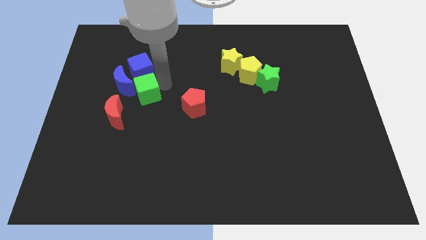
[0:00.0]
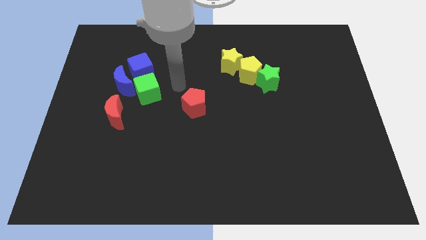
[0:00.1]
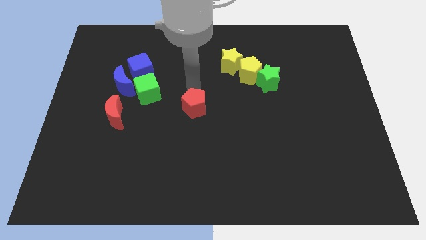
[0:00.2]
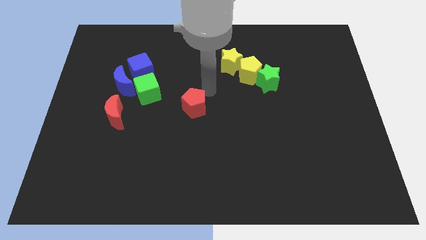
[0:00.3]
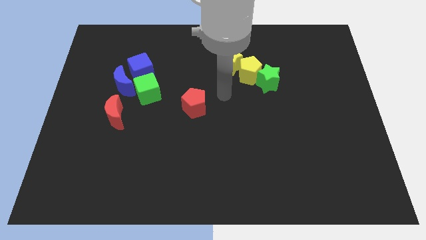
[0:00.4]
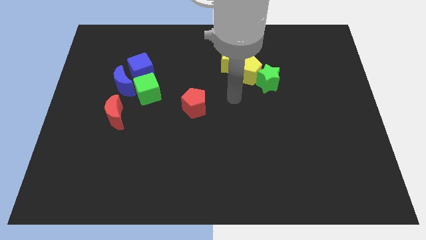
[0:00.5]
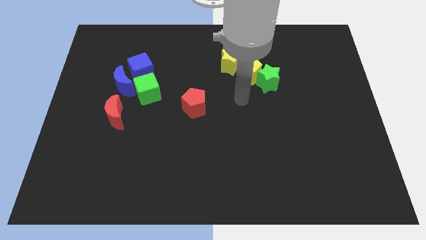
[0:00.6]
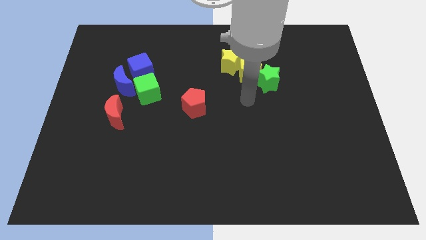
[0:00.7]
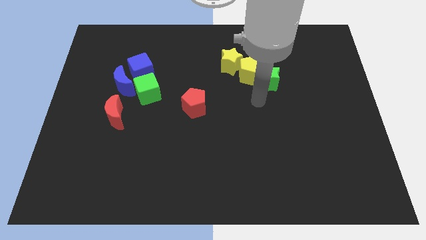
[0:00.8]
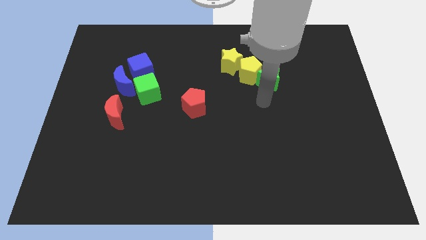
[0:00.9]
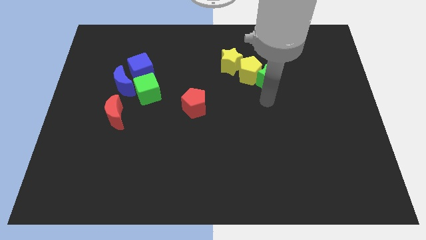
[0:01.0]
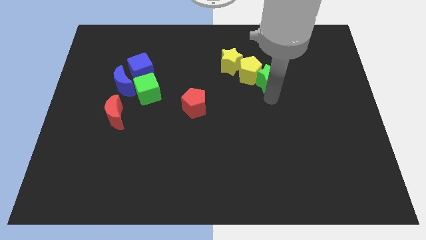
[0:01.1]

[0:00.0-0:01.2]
move your arm away from green cube

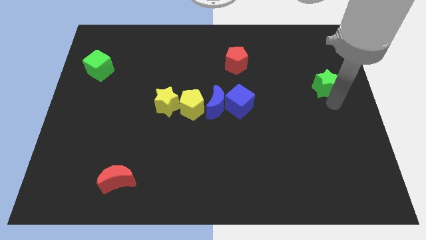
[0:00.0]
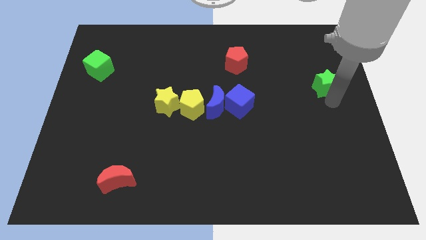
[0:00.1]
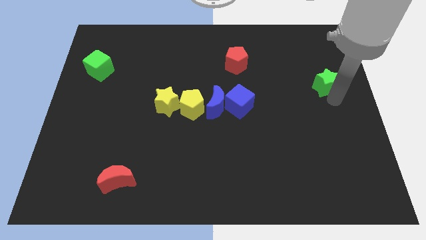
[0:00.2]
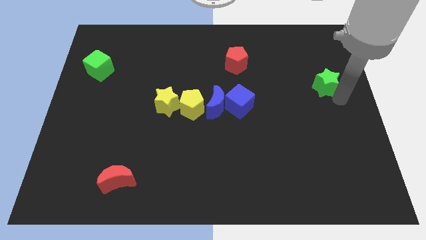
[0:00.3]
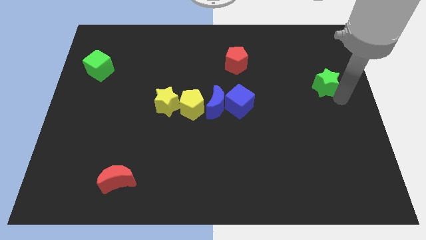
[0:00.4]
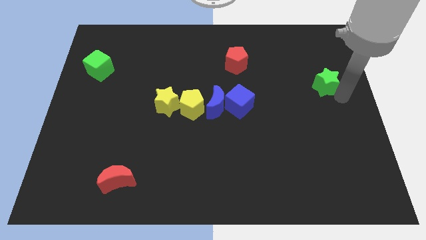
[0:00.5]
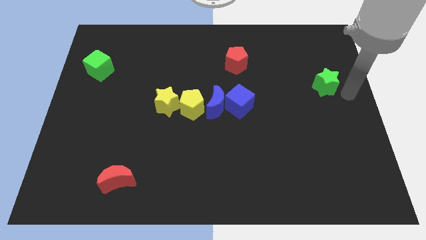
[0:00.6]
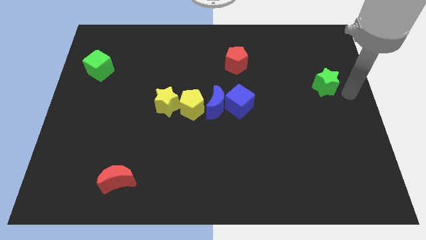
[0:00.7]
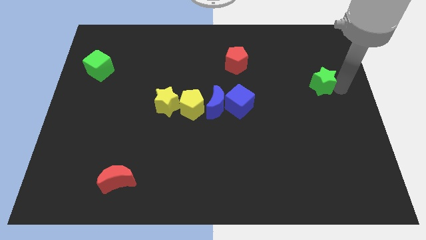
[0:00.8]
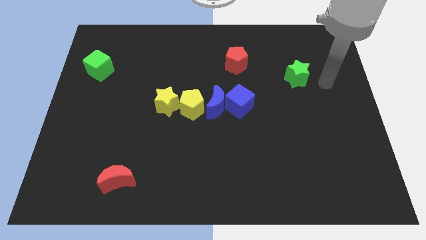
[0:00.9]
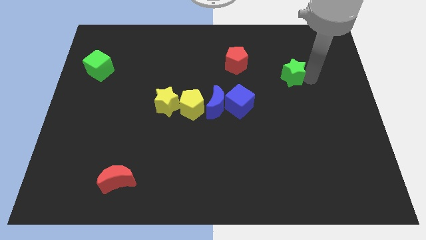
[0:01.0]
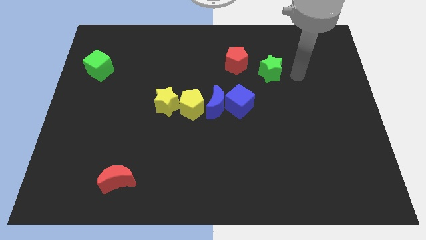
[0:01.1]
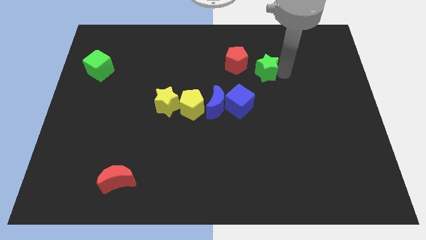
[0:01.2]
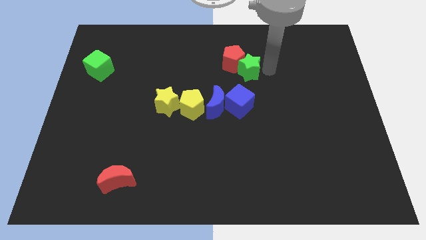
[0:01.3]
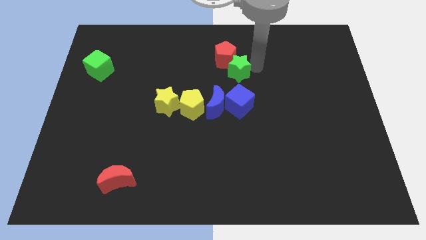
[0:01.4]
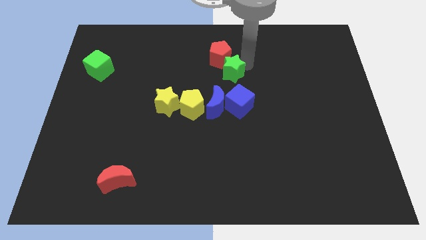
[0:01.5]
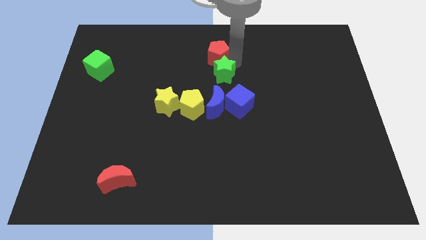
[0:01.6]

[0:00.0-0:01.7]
push the green star into the red pentagon

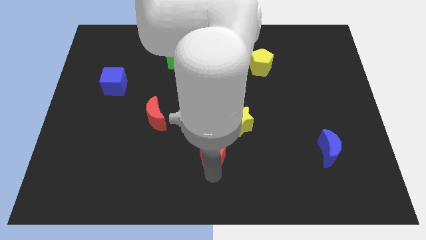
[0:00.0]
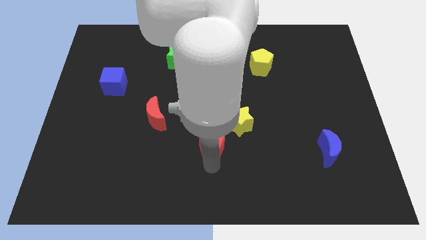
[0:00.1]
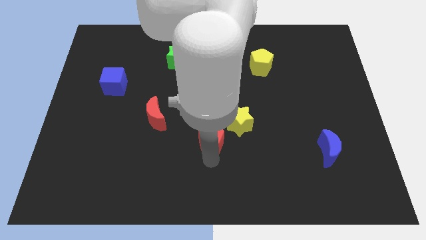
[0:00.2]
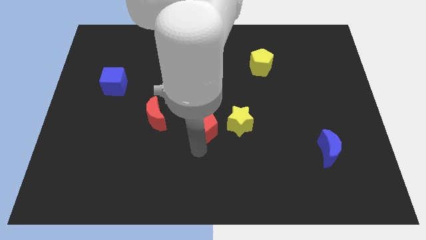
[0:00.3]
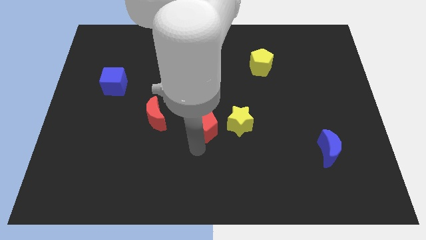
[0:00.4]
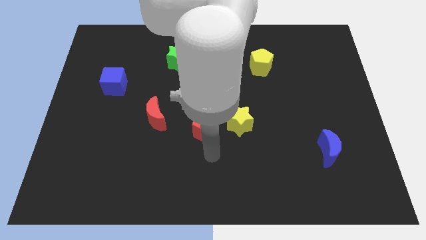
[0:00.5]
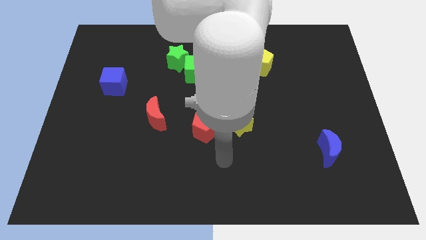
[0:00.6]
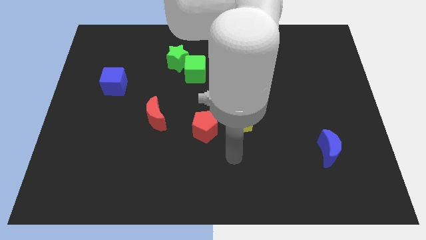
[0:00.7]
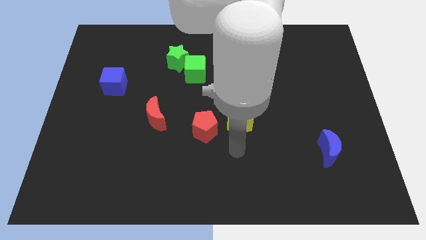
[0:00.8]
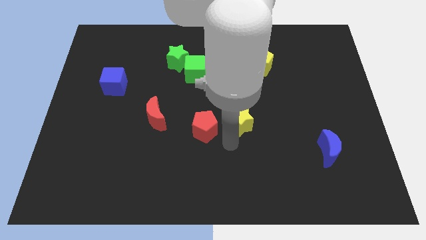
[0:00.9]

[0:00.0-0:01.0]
push red pentagon parallel to yellow star

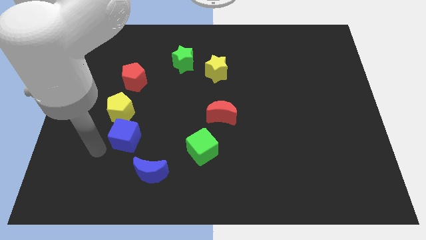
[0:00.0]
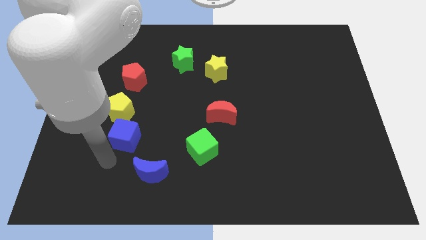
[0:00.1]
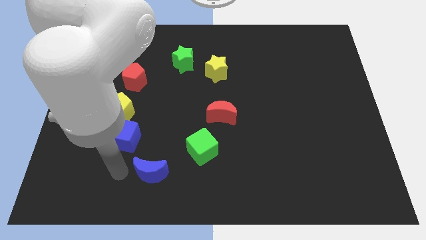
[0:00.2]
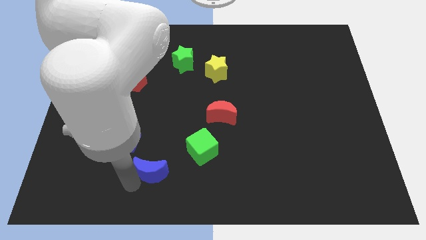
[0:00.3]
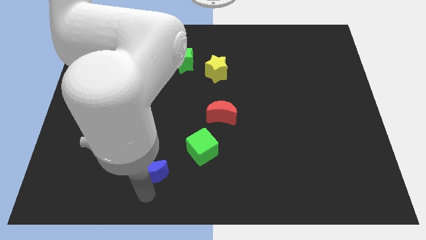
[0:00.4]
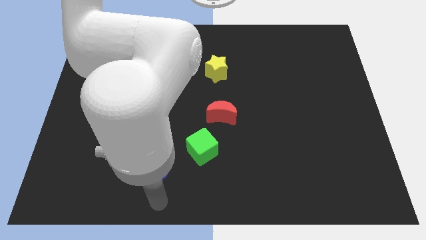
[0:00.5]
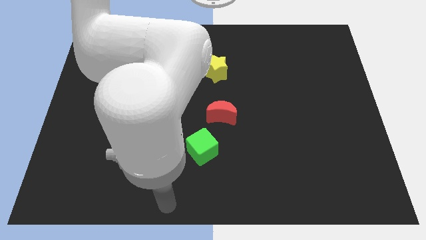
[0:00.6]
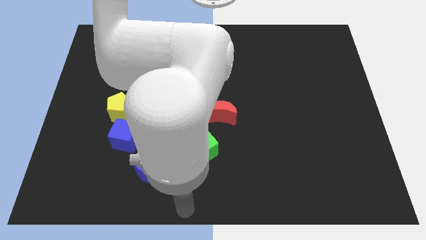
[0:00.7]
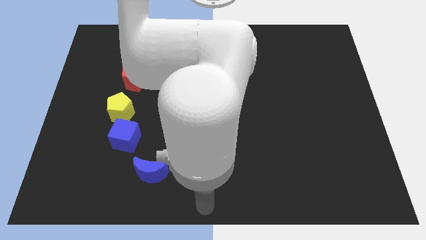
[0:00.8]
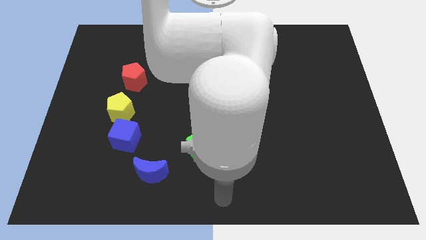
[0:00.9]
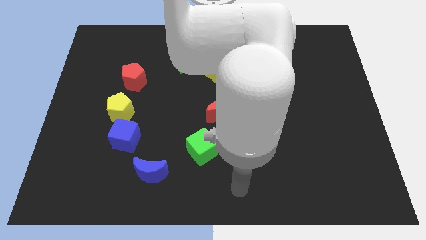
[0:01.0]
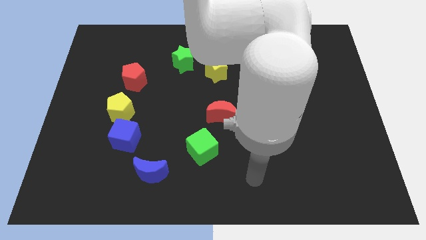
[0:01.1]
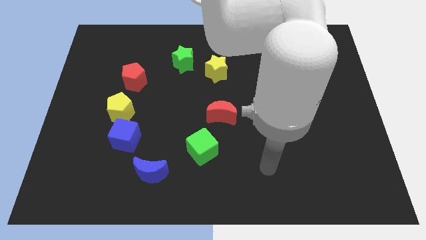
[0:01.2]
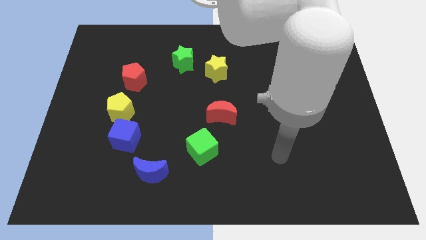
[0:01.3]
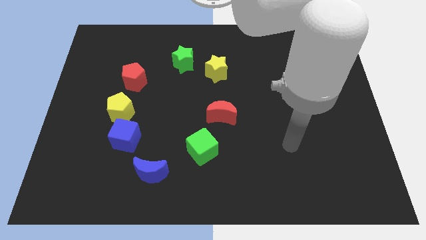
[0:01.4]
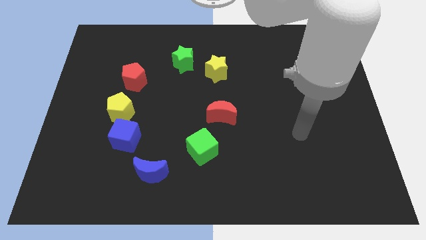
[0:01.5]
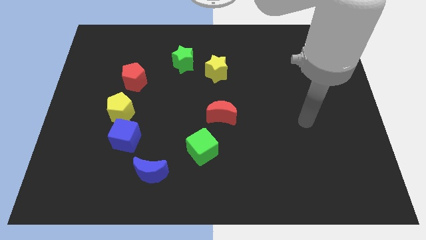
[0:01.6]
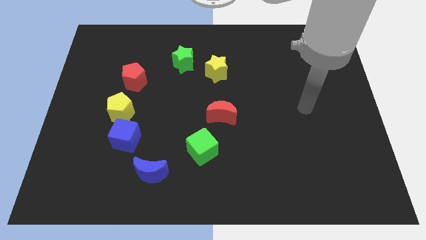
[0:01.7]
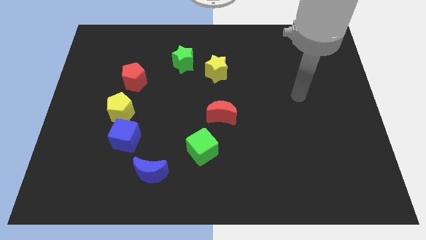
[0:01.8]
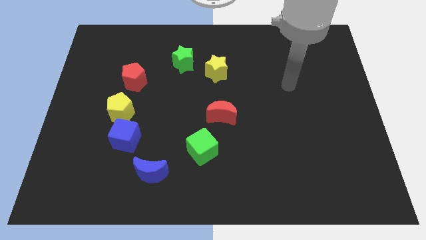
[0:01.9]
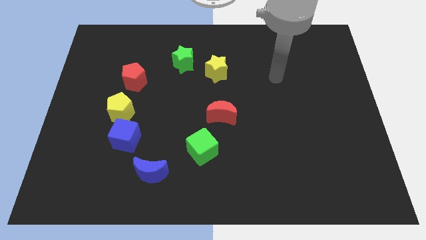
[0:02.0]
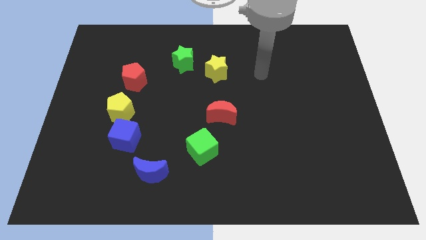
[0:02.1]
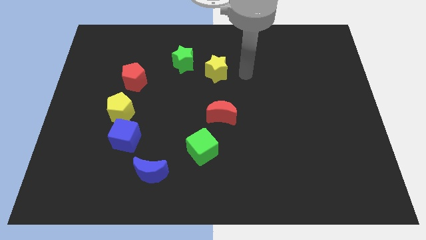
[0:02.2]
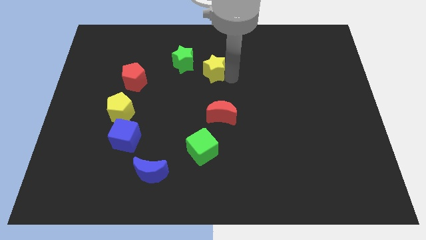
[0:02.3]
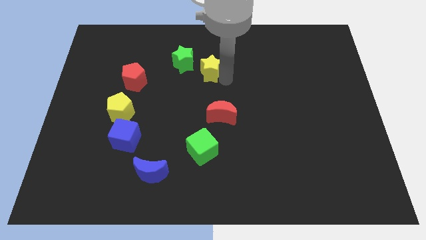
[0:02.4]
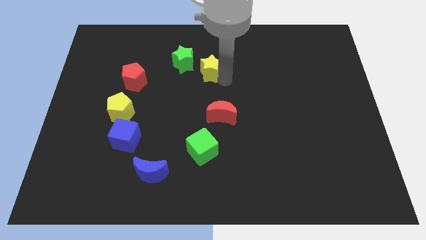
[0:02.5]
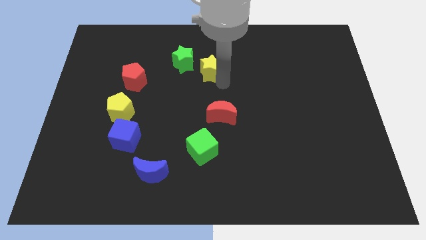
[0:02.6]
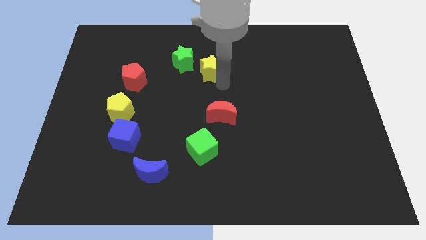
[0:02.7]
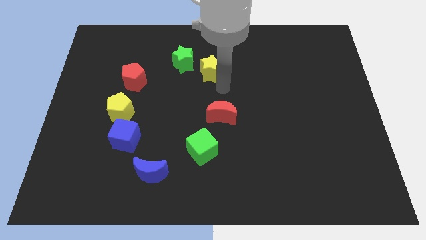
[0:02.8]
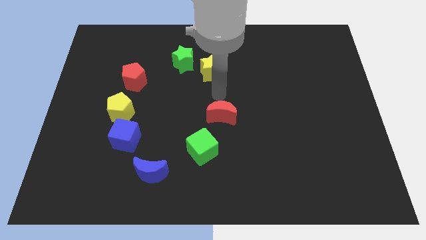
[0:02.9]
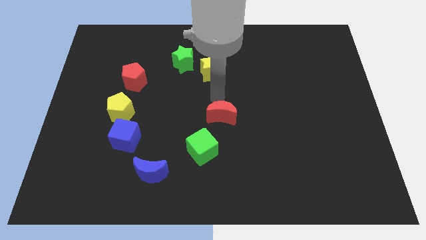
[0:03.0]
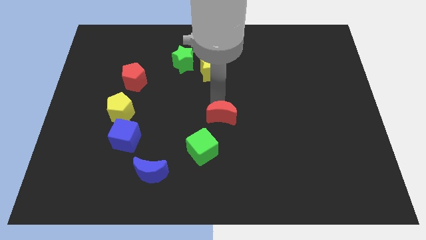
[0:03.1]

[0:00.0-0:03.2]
place your arm above red moon

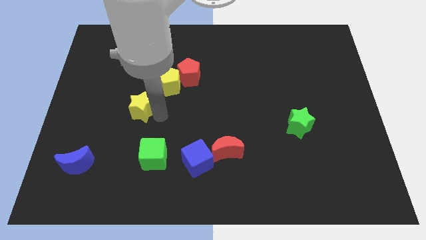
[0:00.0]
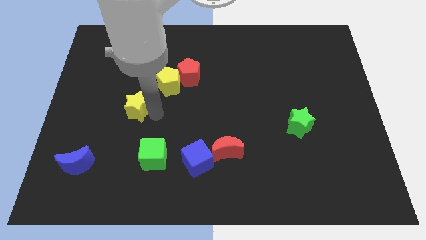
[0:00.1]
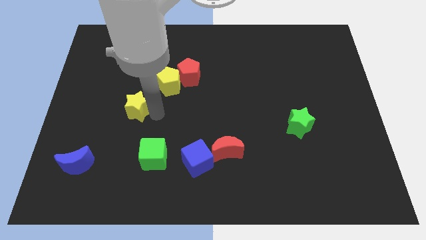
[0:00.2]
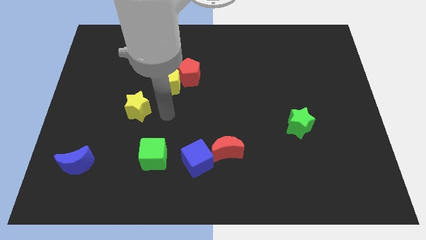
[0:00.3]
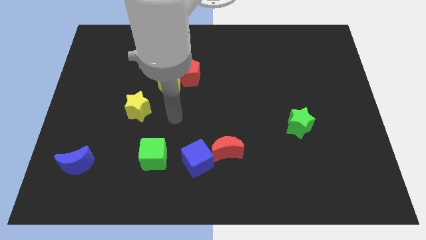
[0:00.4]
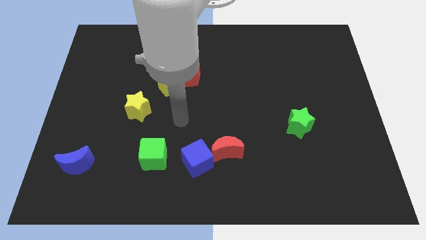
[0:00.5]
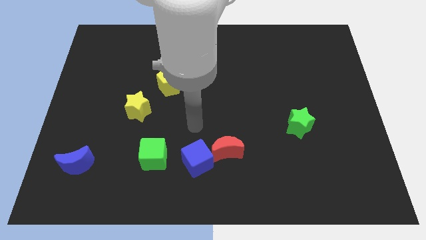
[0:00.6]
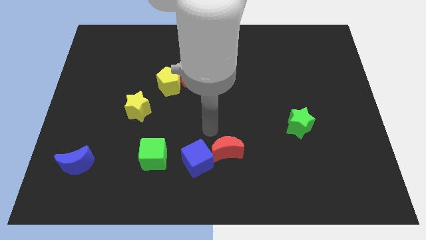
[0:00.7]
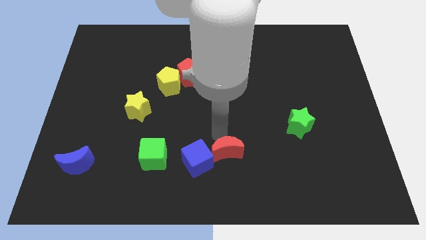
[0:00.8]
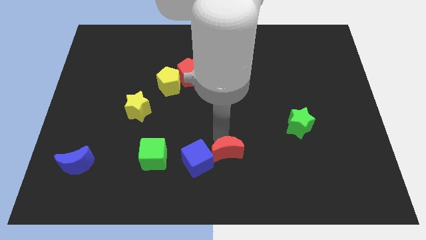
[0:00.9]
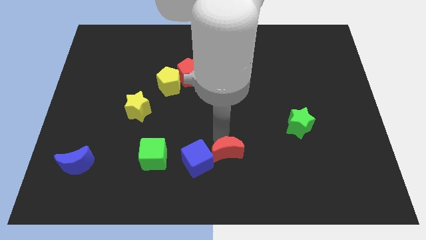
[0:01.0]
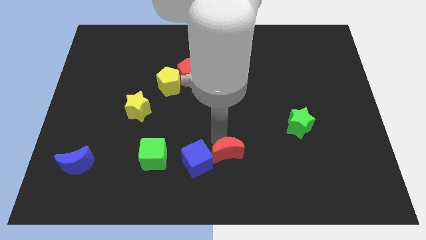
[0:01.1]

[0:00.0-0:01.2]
move your arm to the top of red crescent

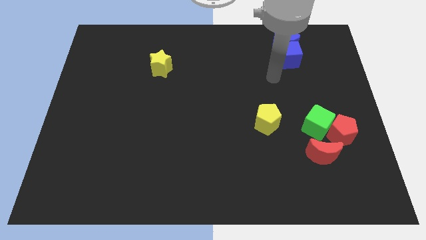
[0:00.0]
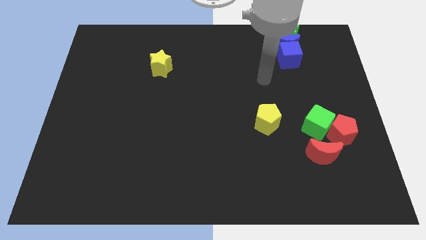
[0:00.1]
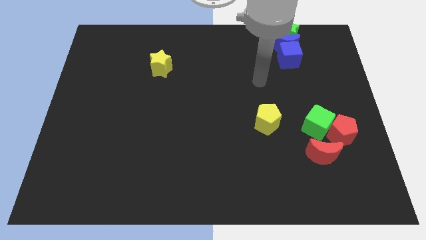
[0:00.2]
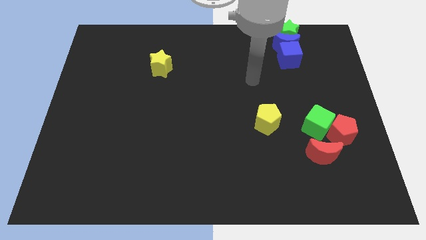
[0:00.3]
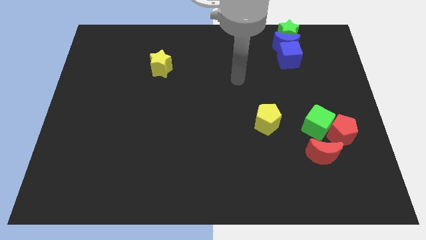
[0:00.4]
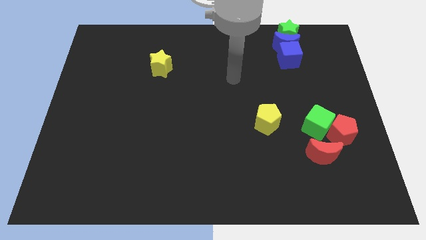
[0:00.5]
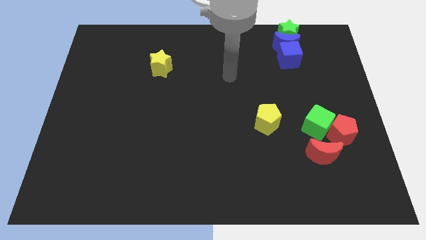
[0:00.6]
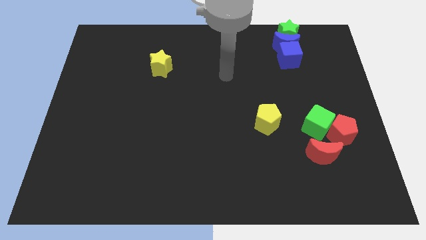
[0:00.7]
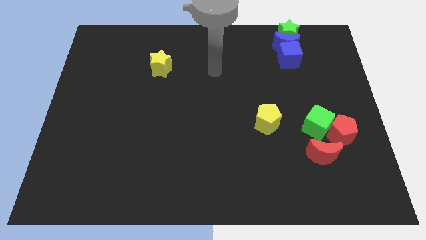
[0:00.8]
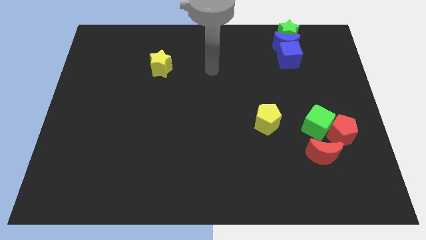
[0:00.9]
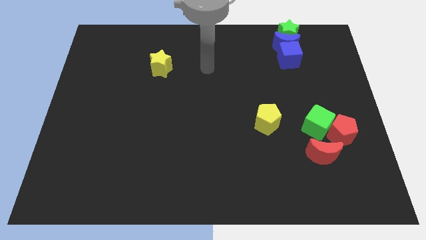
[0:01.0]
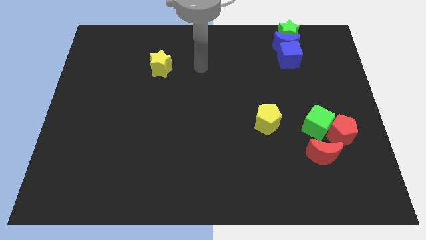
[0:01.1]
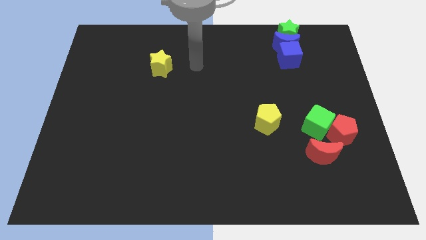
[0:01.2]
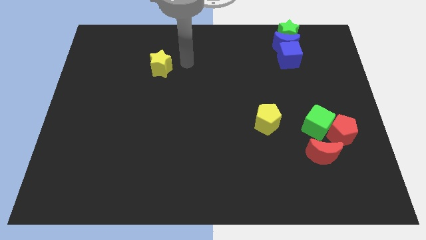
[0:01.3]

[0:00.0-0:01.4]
place the arm to the left of the yellow star
